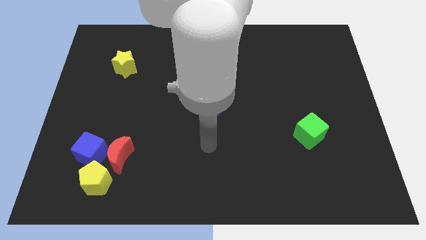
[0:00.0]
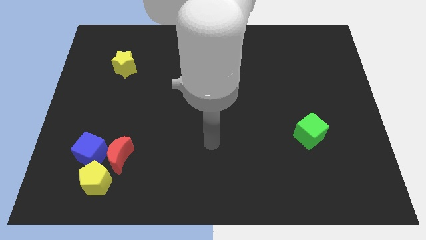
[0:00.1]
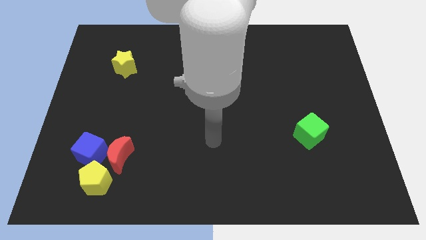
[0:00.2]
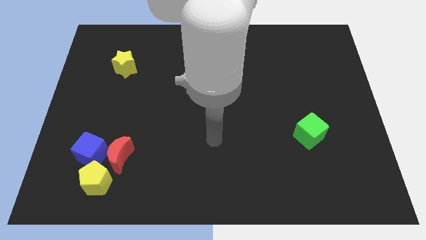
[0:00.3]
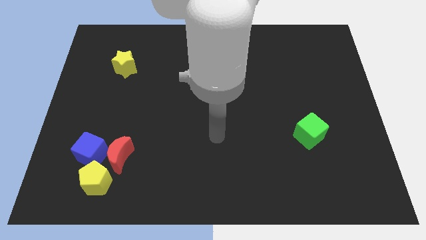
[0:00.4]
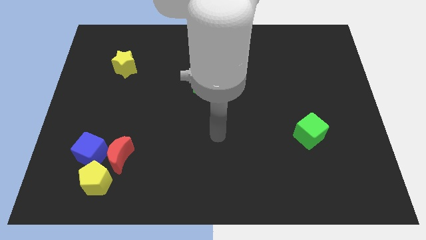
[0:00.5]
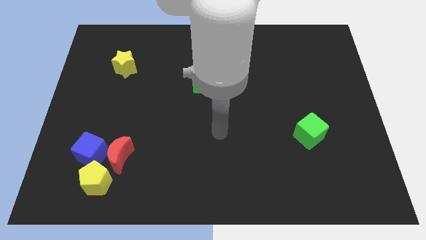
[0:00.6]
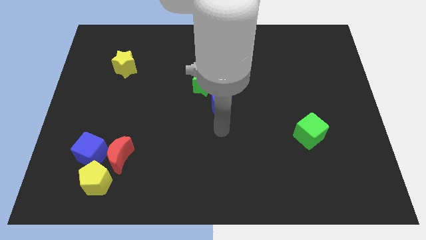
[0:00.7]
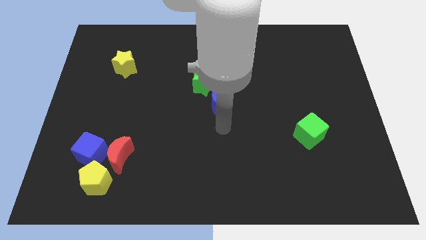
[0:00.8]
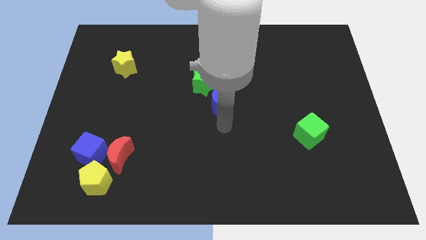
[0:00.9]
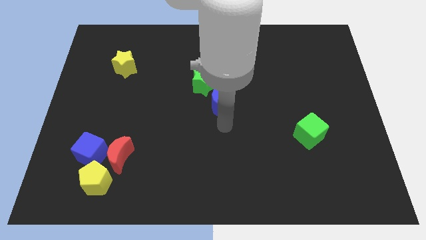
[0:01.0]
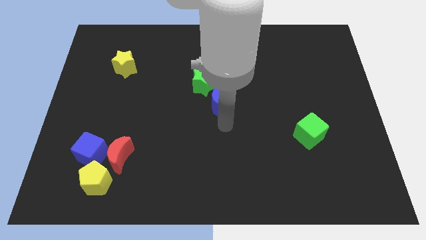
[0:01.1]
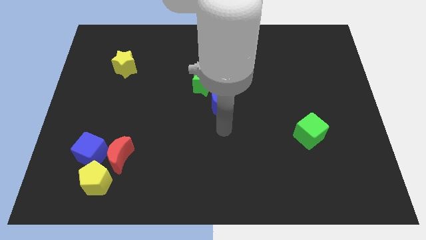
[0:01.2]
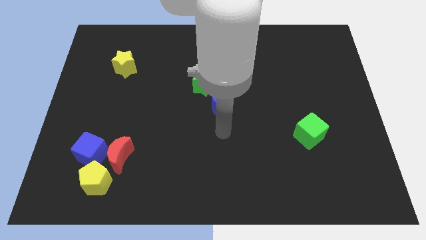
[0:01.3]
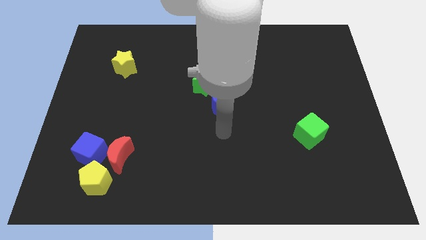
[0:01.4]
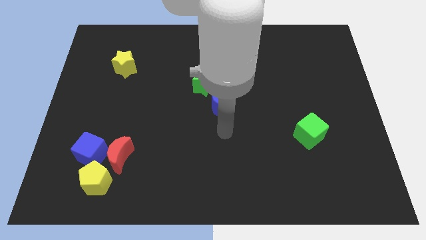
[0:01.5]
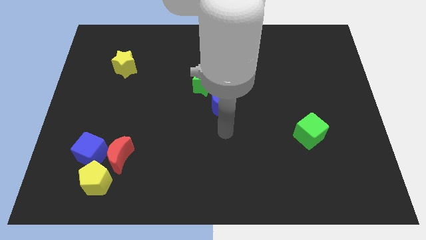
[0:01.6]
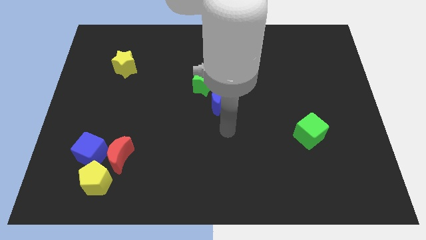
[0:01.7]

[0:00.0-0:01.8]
place your arm on the bottom of blue moon

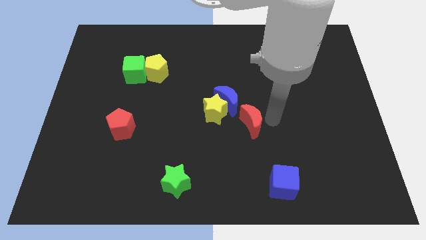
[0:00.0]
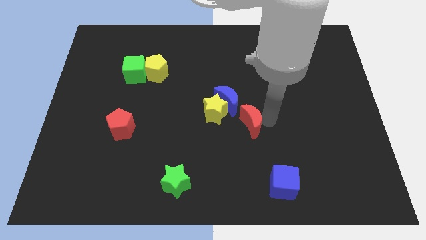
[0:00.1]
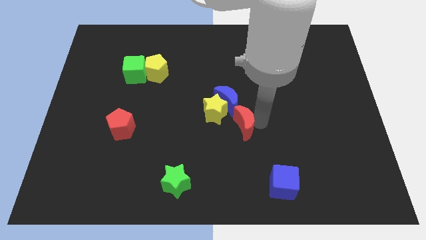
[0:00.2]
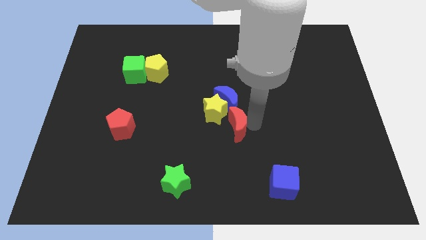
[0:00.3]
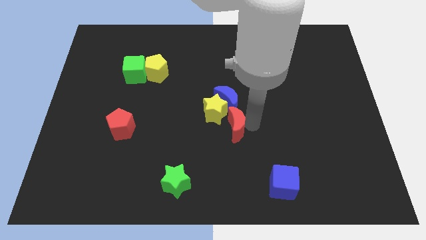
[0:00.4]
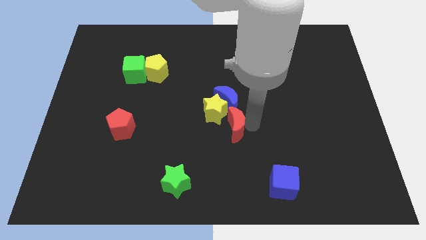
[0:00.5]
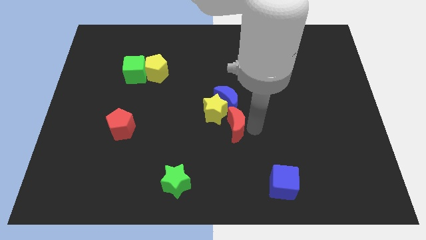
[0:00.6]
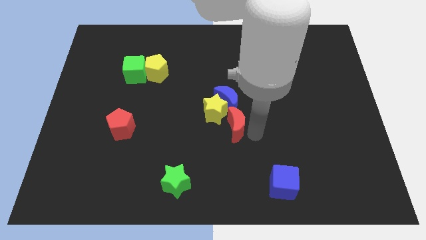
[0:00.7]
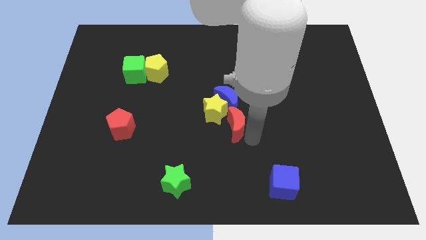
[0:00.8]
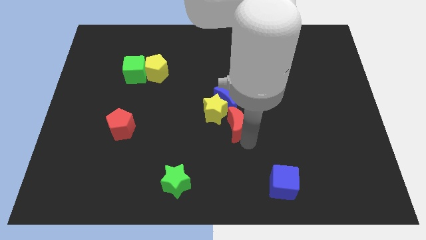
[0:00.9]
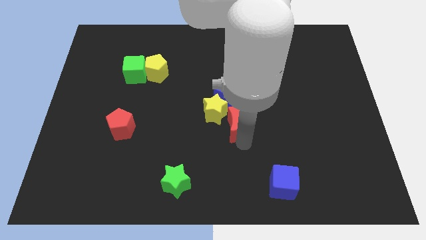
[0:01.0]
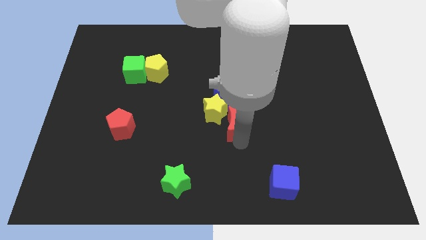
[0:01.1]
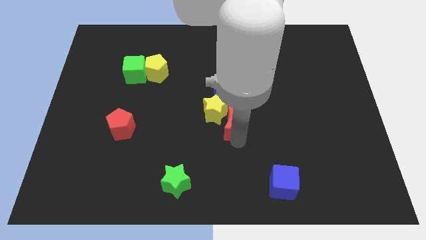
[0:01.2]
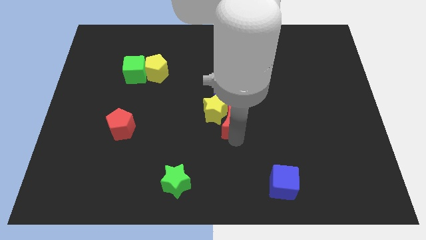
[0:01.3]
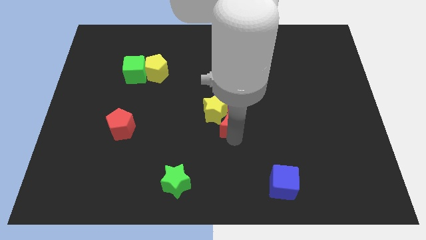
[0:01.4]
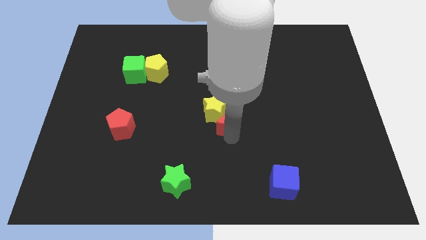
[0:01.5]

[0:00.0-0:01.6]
move the red moon into the yellow star

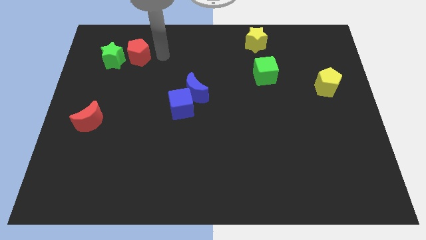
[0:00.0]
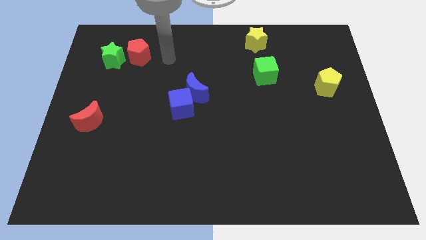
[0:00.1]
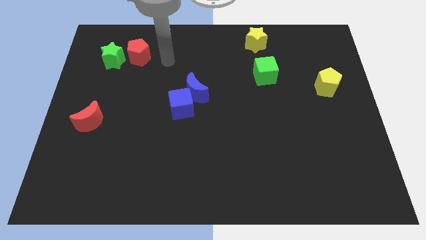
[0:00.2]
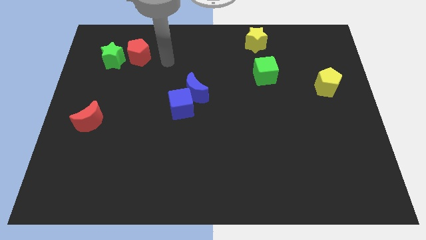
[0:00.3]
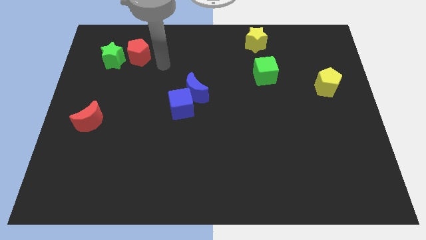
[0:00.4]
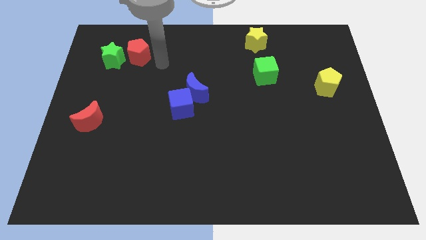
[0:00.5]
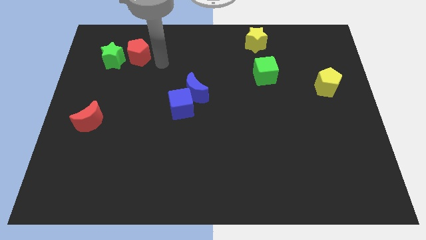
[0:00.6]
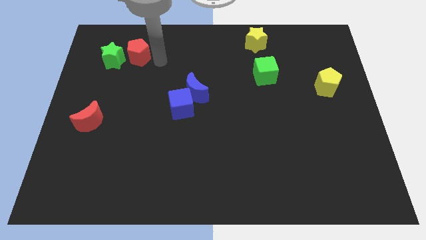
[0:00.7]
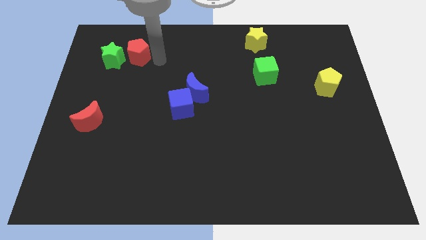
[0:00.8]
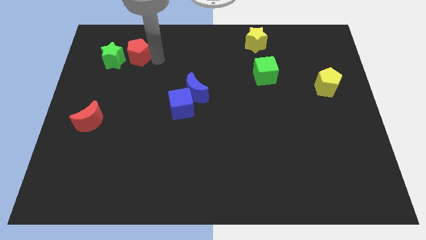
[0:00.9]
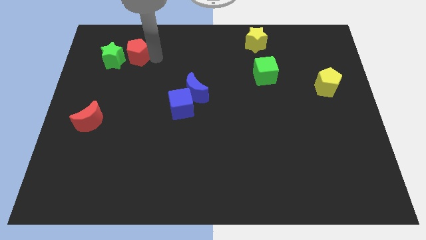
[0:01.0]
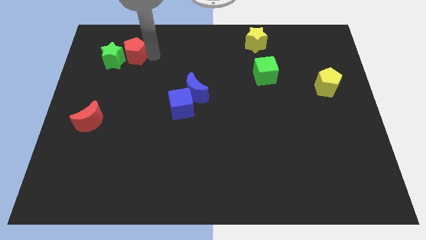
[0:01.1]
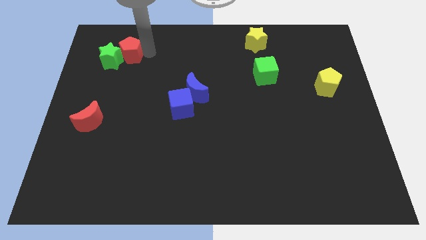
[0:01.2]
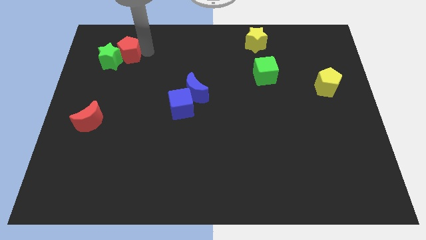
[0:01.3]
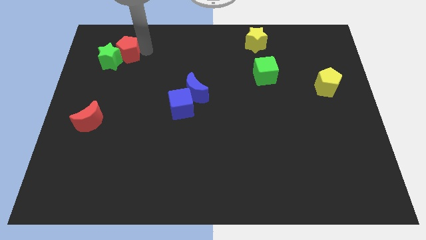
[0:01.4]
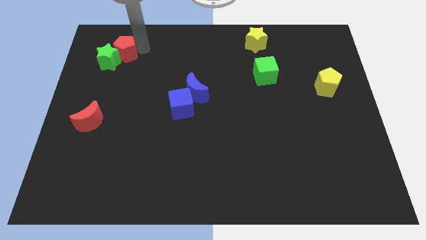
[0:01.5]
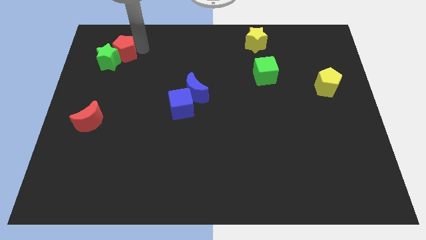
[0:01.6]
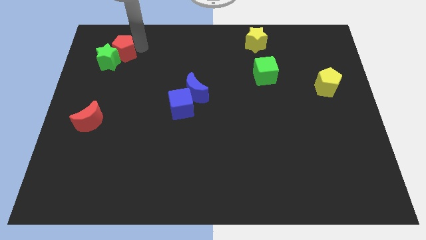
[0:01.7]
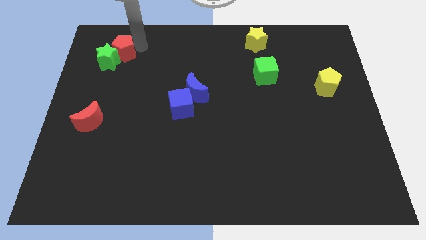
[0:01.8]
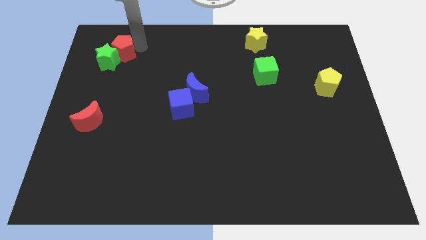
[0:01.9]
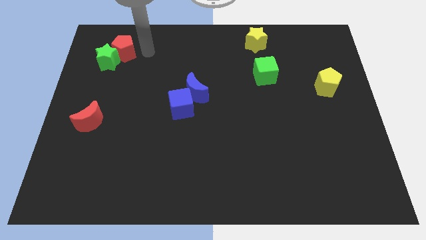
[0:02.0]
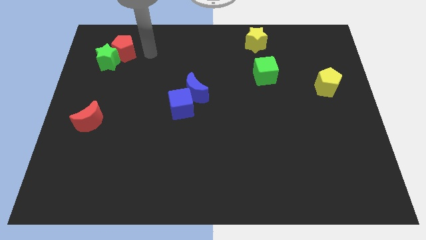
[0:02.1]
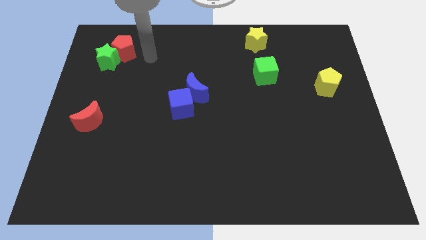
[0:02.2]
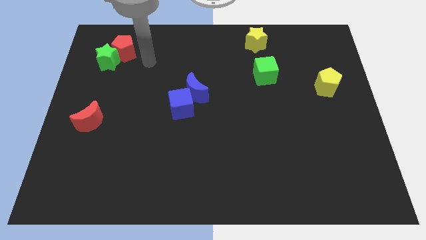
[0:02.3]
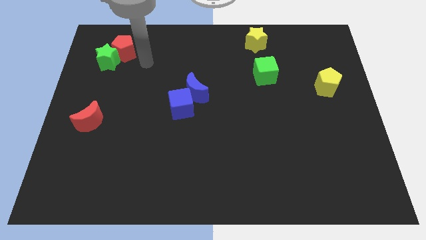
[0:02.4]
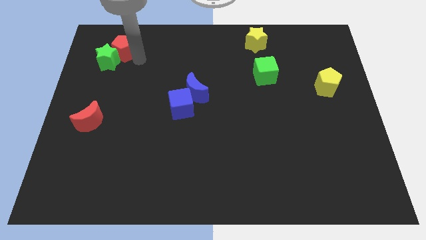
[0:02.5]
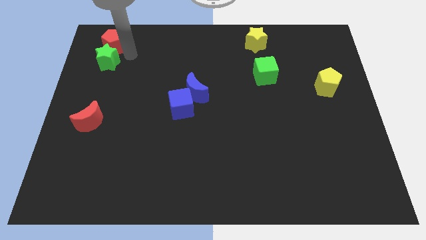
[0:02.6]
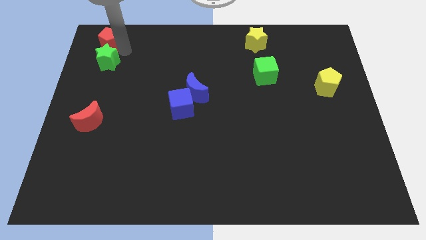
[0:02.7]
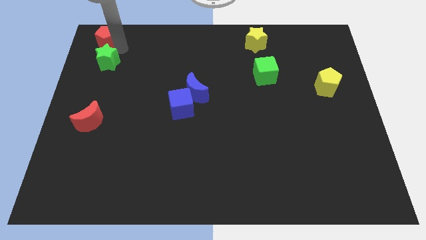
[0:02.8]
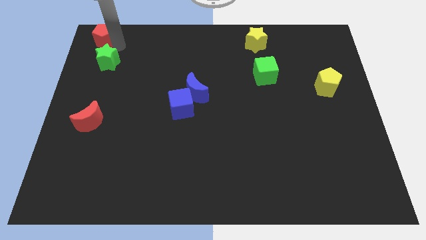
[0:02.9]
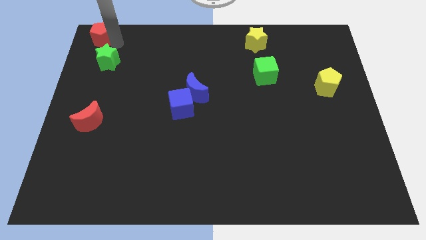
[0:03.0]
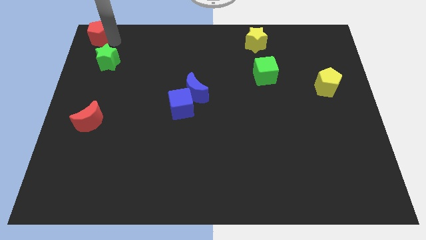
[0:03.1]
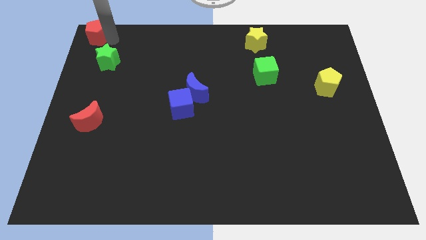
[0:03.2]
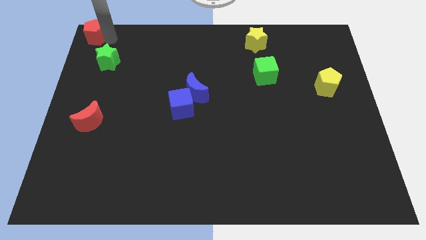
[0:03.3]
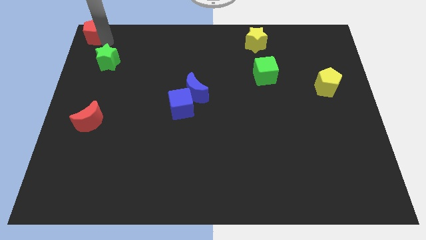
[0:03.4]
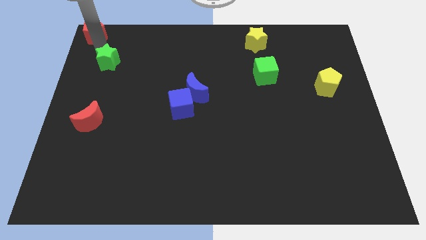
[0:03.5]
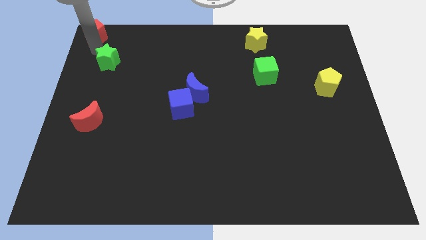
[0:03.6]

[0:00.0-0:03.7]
place the red pentagon to the top left corner of the board

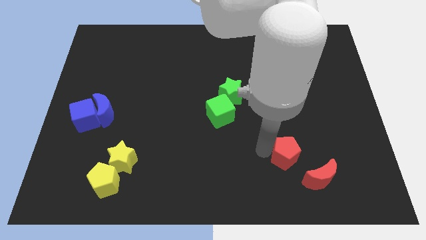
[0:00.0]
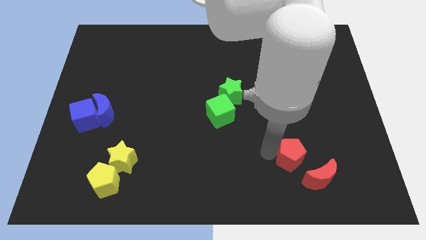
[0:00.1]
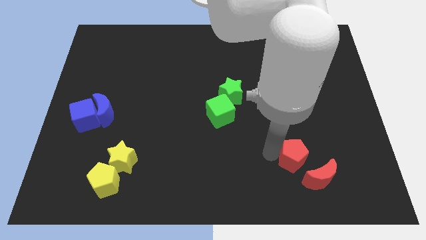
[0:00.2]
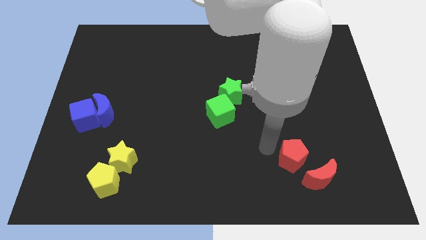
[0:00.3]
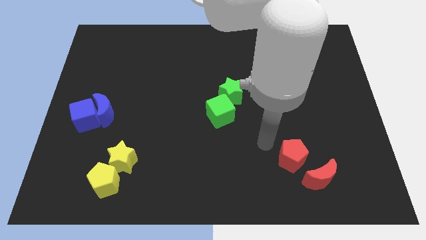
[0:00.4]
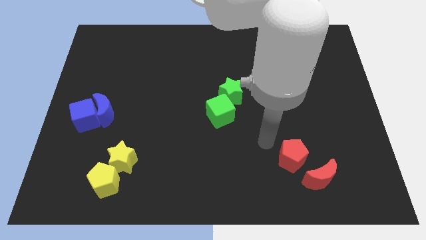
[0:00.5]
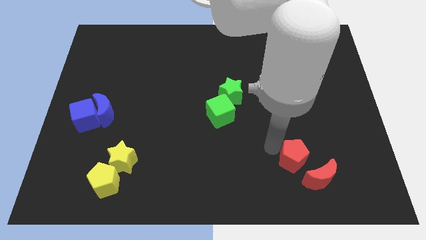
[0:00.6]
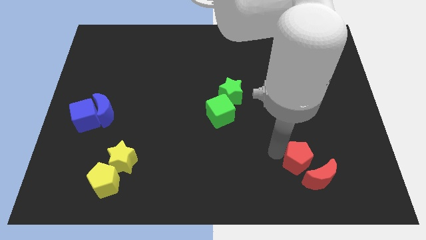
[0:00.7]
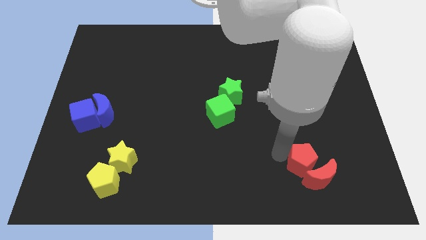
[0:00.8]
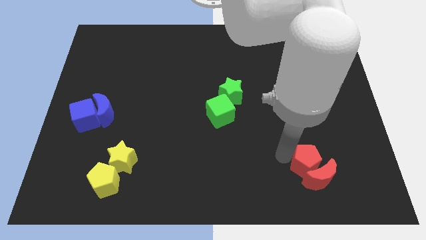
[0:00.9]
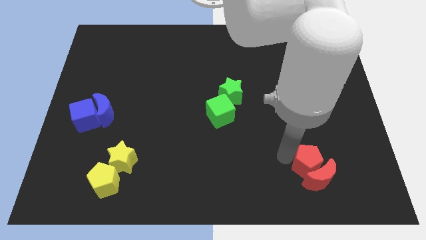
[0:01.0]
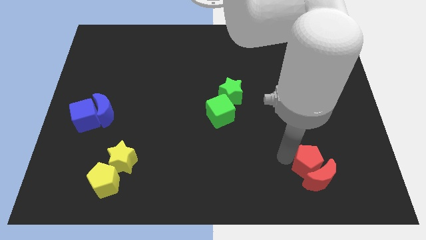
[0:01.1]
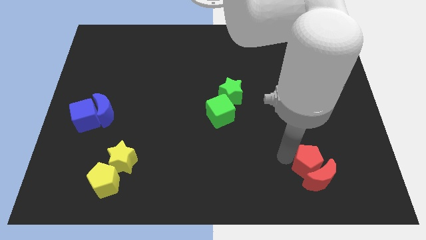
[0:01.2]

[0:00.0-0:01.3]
push the red pentagon into the red crescent

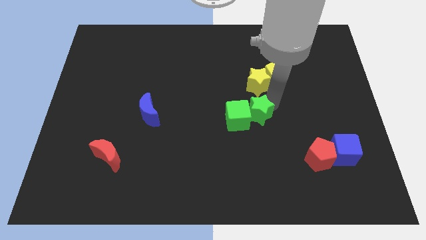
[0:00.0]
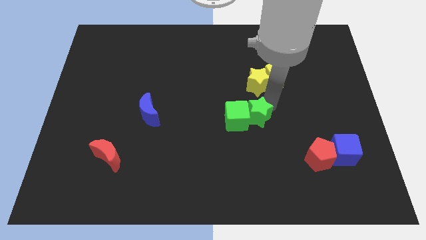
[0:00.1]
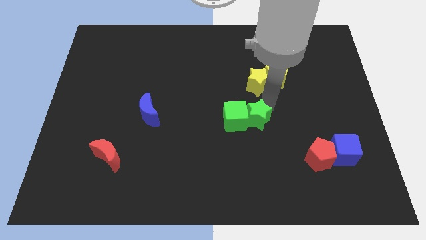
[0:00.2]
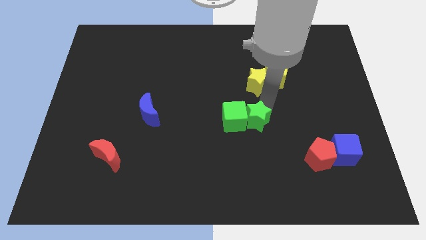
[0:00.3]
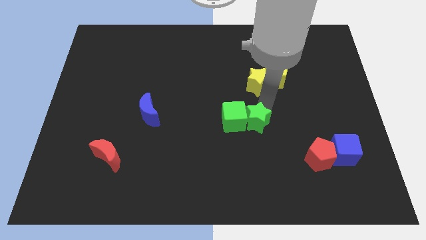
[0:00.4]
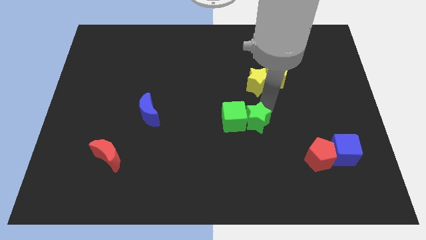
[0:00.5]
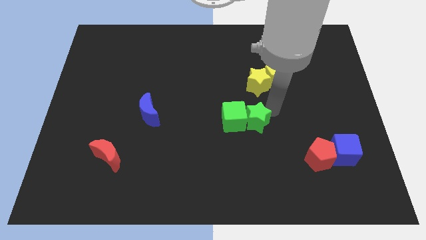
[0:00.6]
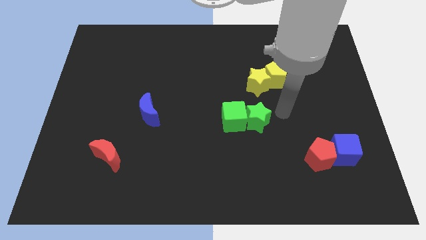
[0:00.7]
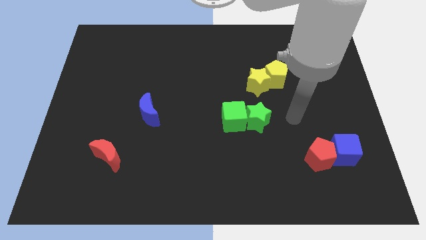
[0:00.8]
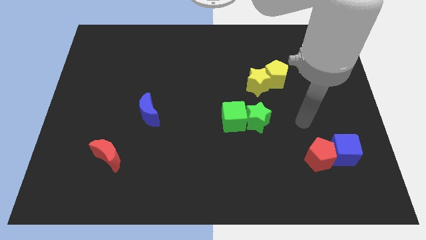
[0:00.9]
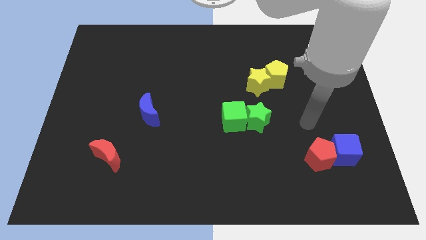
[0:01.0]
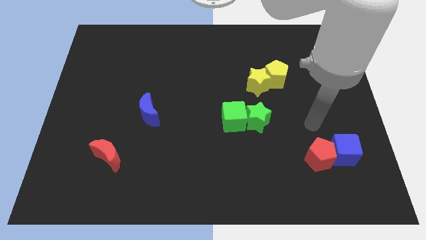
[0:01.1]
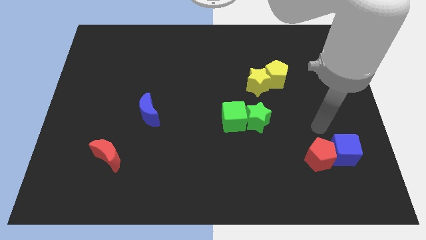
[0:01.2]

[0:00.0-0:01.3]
push the green cube with the green green star
